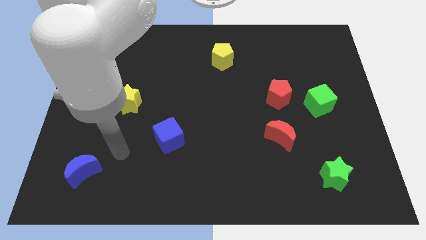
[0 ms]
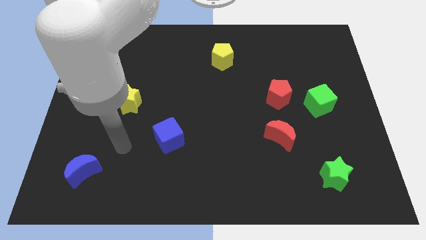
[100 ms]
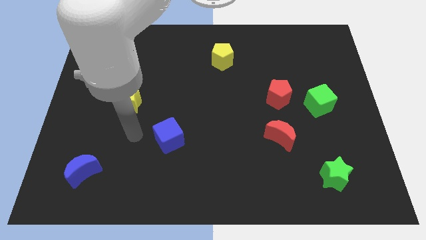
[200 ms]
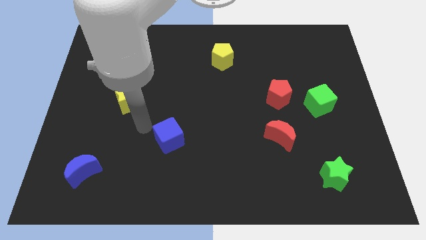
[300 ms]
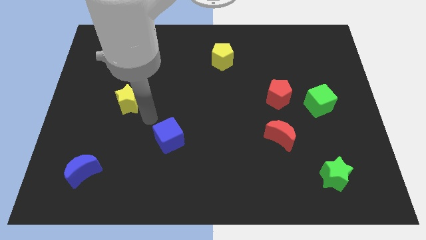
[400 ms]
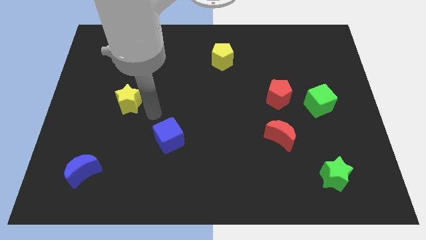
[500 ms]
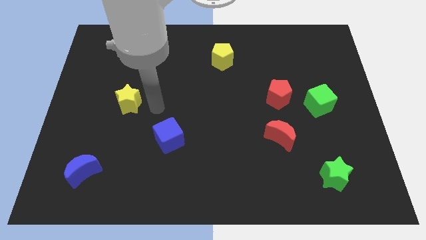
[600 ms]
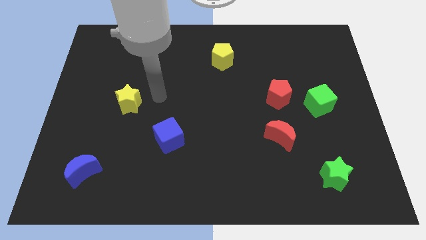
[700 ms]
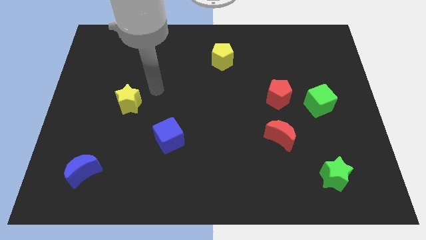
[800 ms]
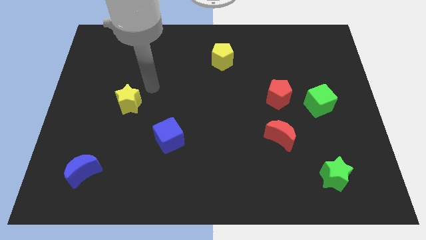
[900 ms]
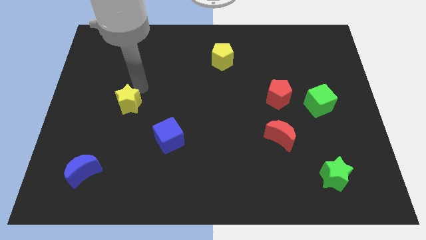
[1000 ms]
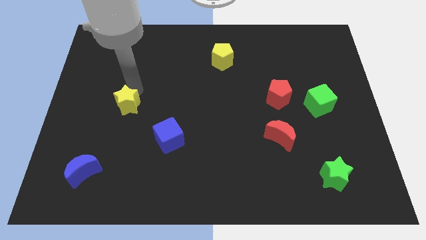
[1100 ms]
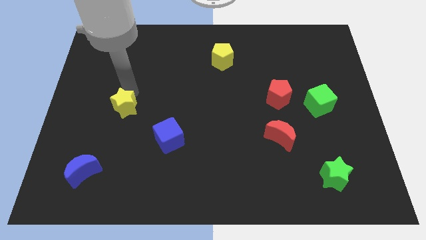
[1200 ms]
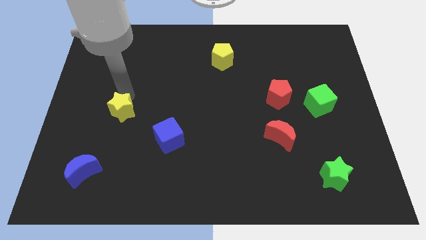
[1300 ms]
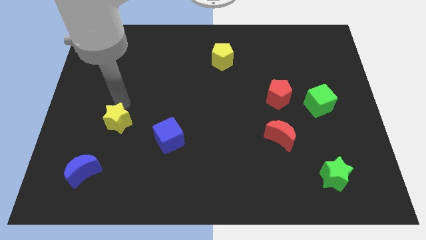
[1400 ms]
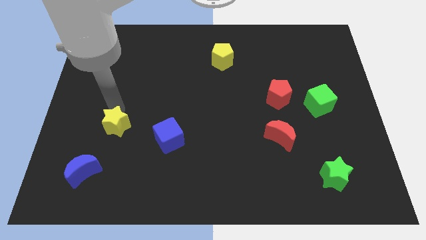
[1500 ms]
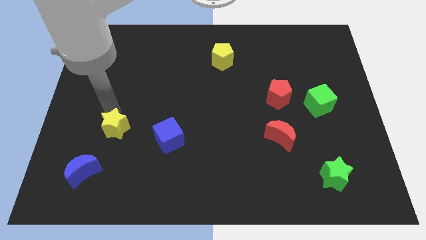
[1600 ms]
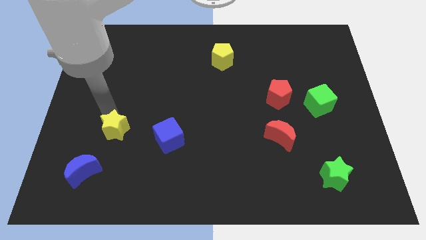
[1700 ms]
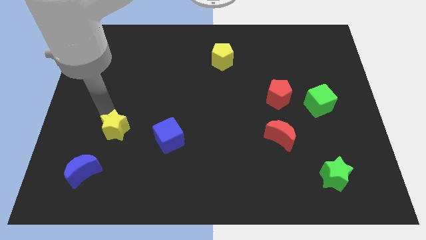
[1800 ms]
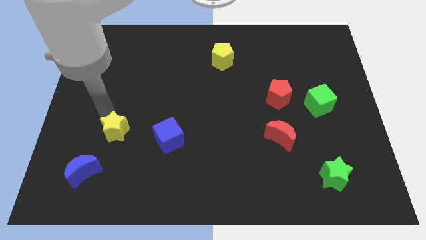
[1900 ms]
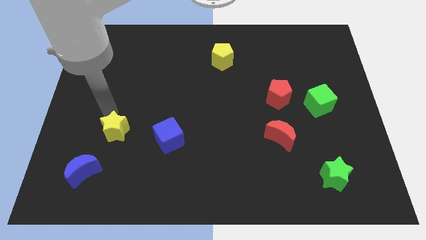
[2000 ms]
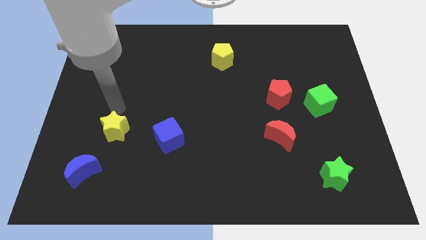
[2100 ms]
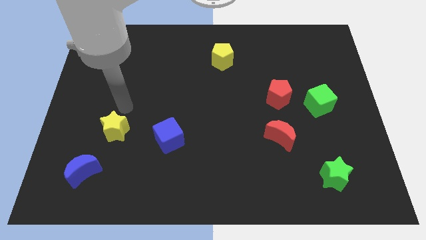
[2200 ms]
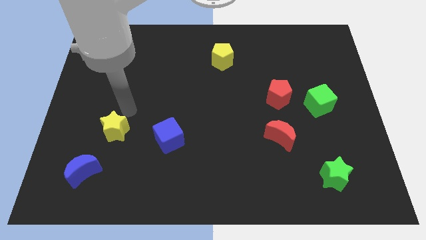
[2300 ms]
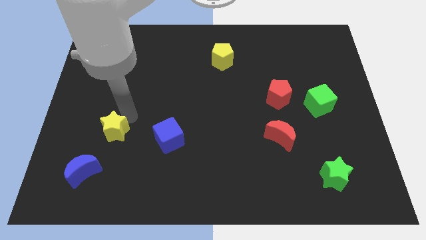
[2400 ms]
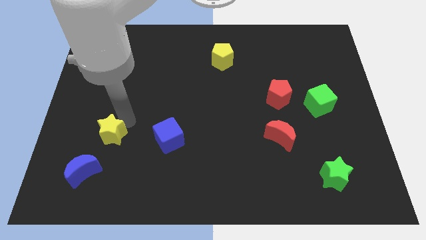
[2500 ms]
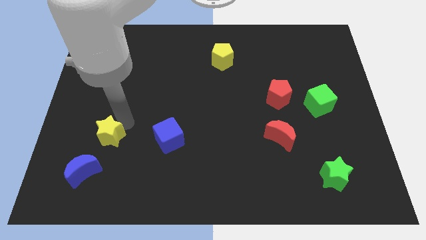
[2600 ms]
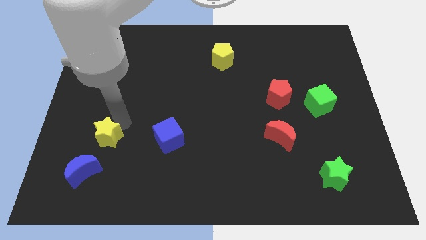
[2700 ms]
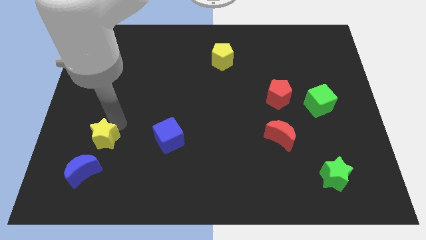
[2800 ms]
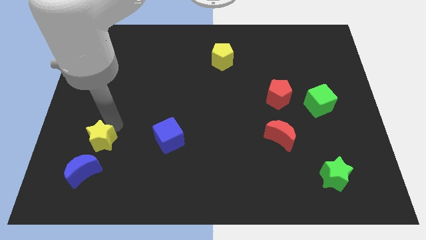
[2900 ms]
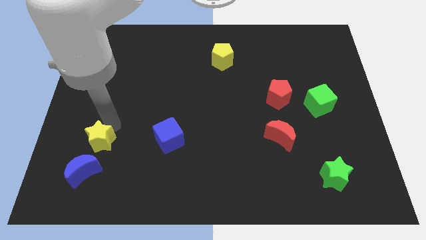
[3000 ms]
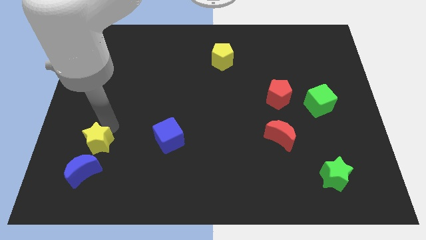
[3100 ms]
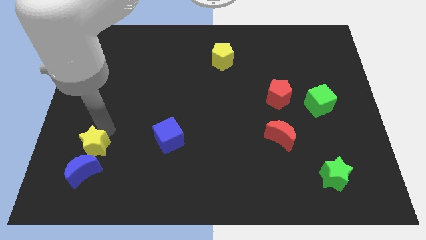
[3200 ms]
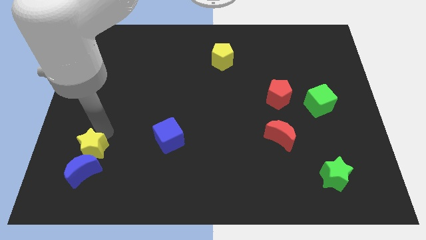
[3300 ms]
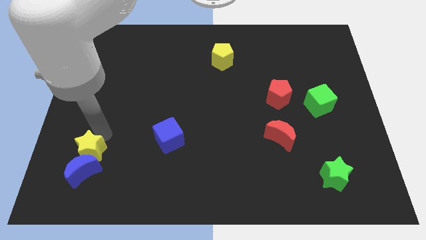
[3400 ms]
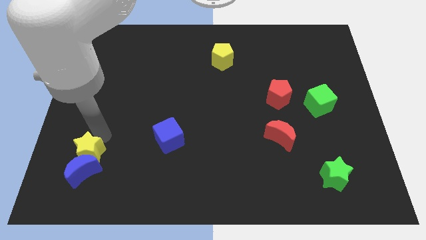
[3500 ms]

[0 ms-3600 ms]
move the yellow star towards the blue moon

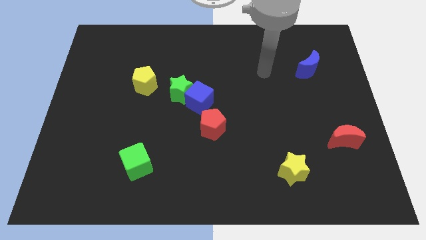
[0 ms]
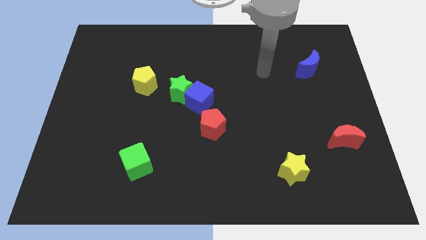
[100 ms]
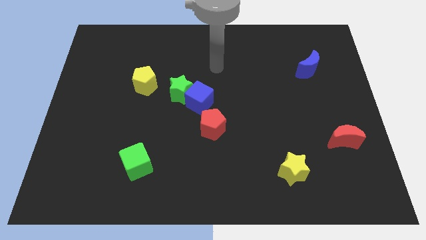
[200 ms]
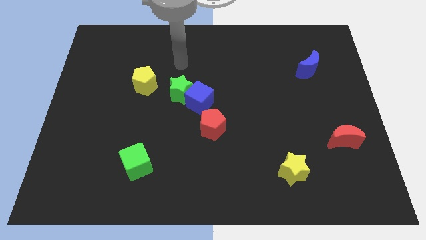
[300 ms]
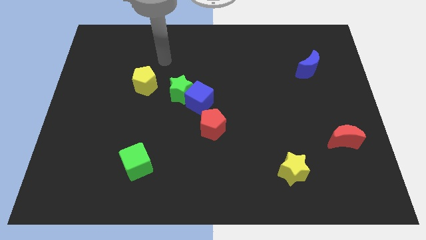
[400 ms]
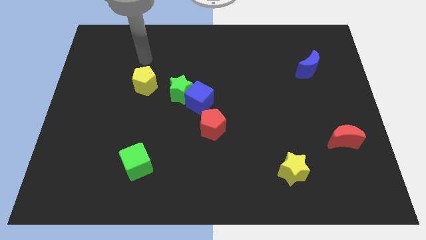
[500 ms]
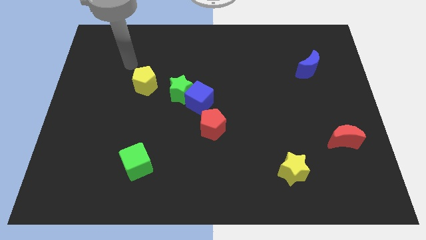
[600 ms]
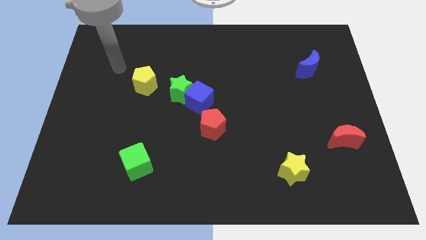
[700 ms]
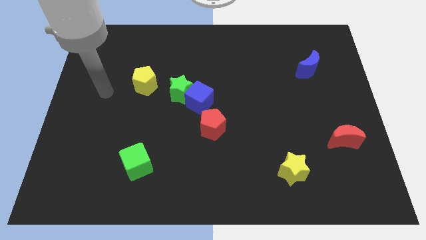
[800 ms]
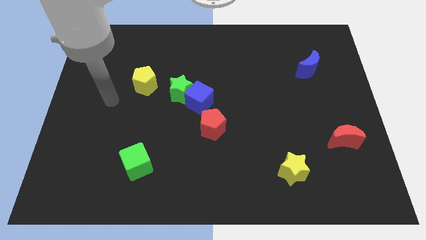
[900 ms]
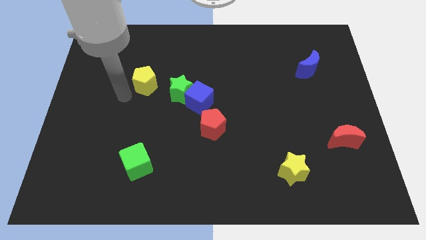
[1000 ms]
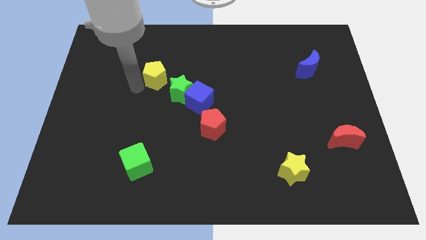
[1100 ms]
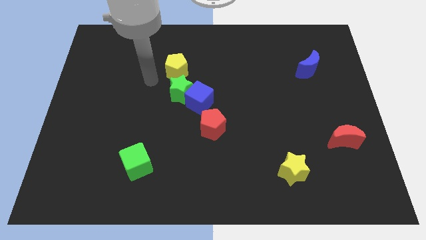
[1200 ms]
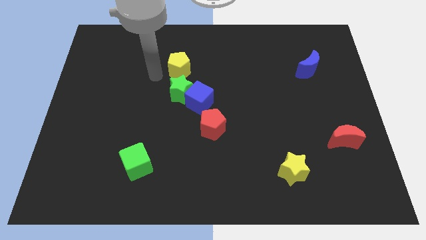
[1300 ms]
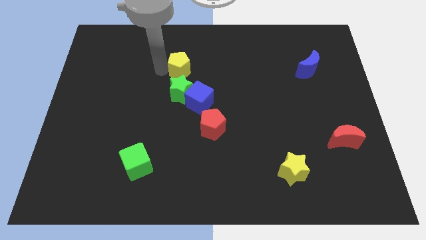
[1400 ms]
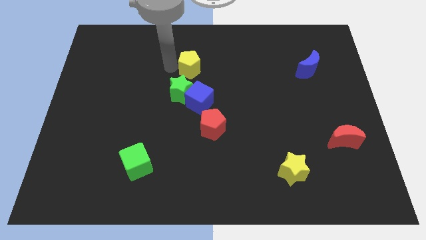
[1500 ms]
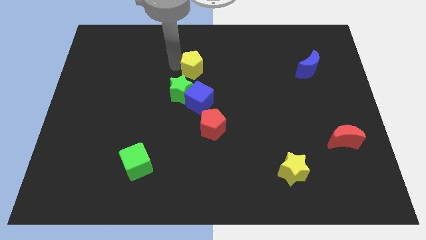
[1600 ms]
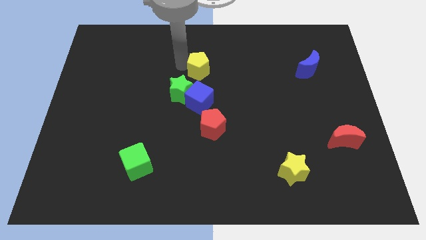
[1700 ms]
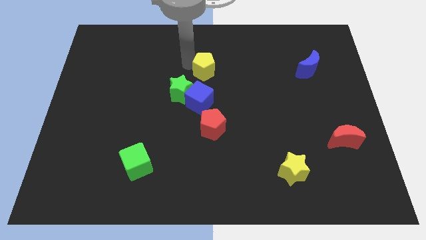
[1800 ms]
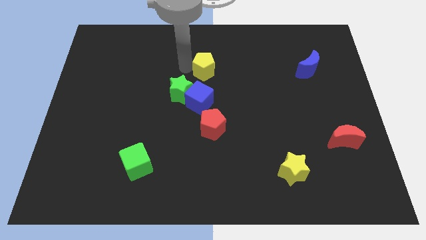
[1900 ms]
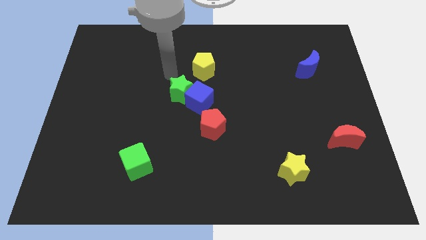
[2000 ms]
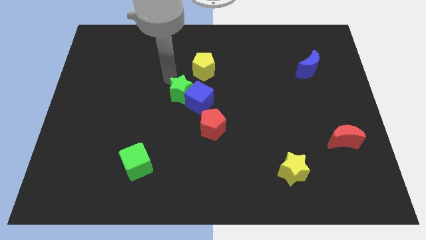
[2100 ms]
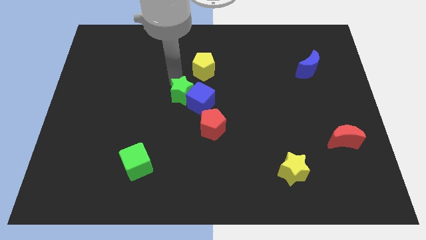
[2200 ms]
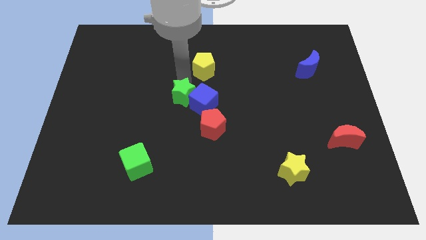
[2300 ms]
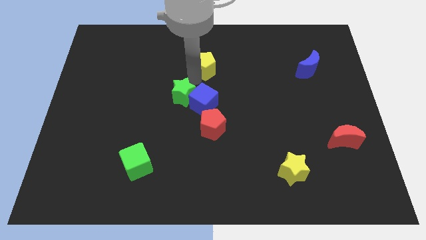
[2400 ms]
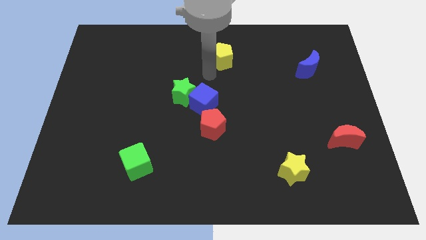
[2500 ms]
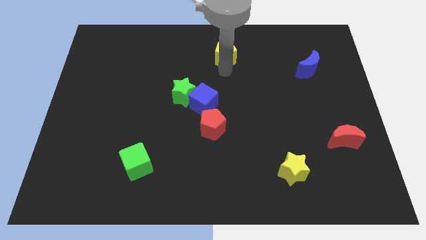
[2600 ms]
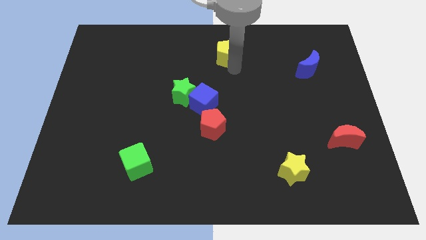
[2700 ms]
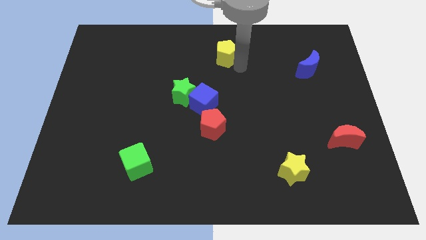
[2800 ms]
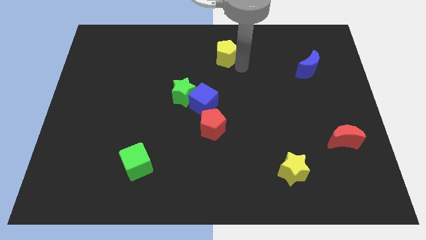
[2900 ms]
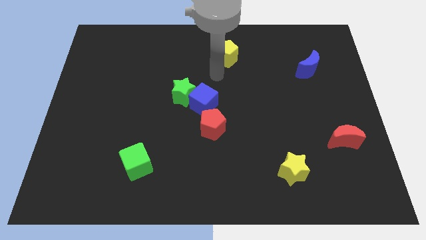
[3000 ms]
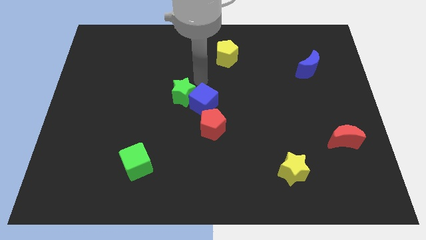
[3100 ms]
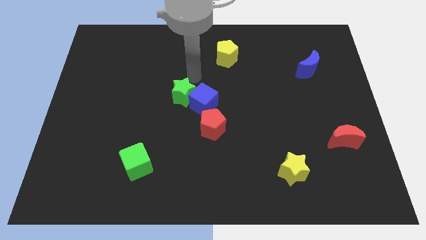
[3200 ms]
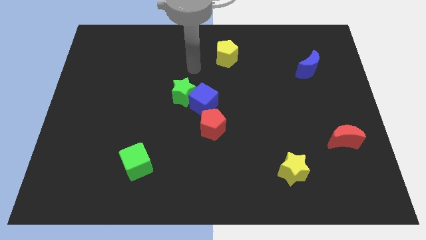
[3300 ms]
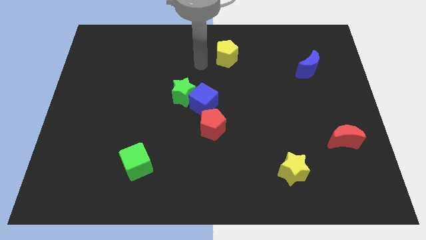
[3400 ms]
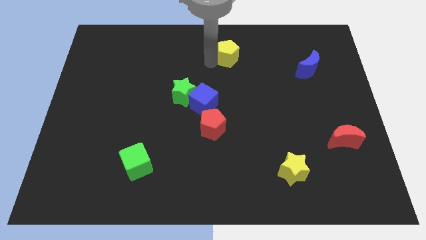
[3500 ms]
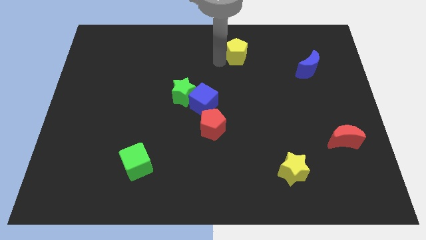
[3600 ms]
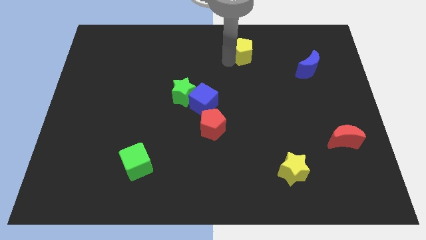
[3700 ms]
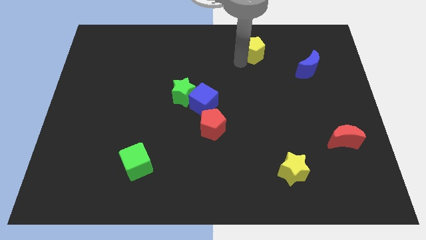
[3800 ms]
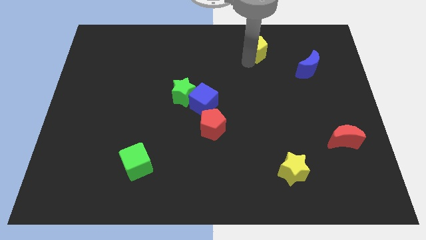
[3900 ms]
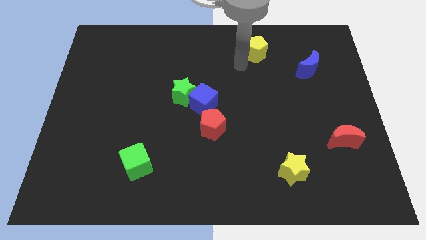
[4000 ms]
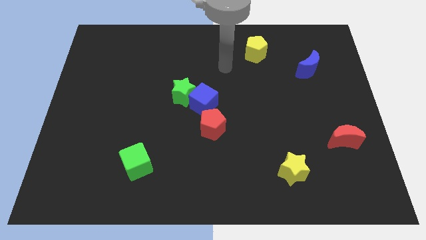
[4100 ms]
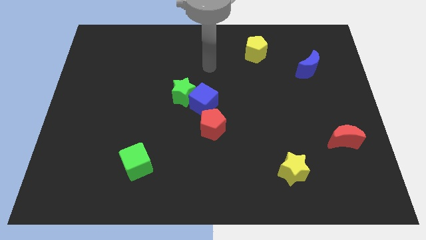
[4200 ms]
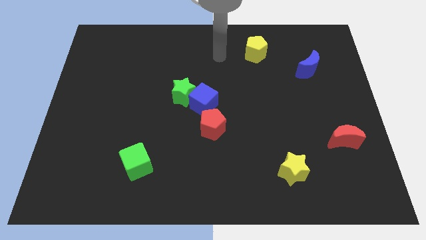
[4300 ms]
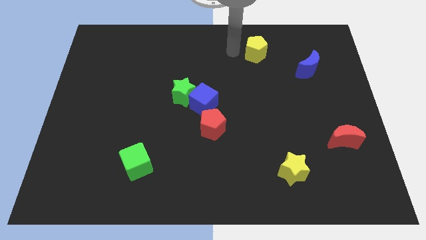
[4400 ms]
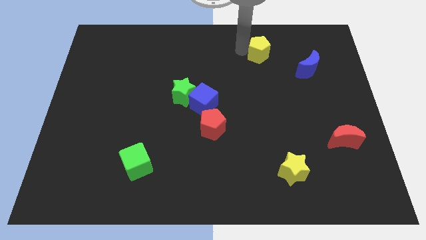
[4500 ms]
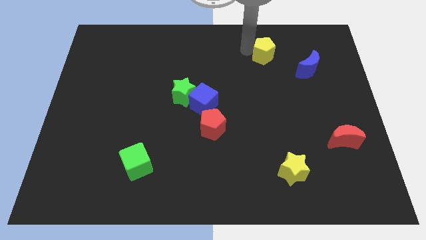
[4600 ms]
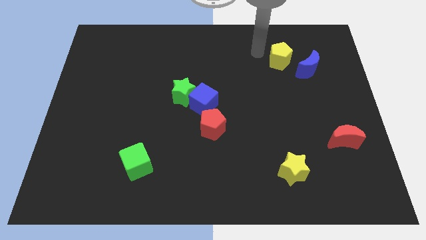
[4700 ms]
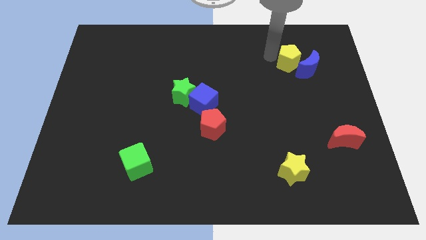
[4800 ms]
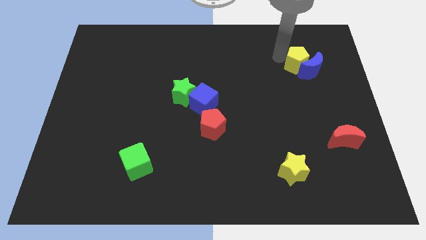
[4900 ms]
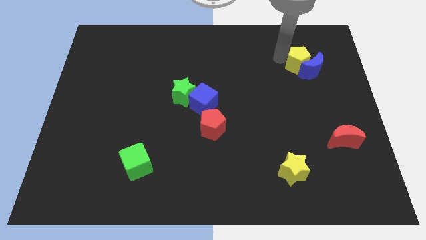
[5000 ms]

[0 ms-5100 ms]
move the yellow pentagon close to the blue moon

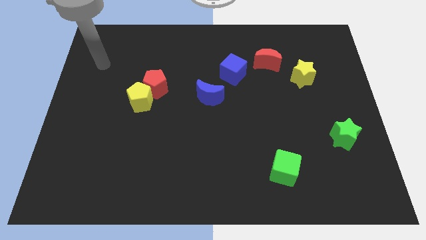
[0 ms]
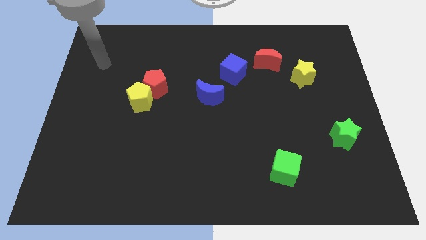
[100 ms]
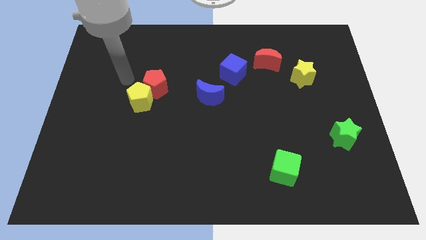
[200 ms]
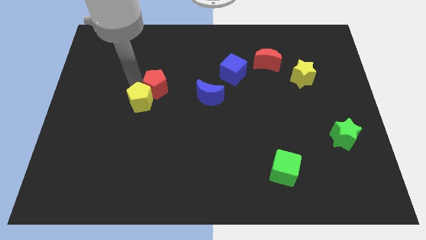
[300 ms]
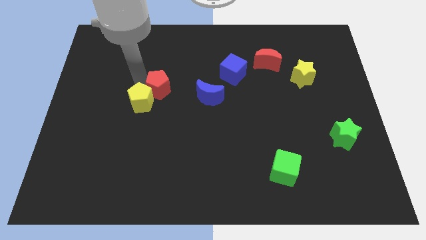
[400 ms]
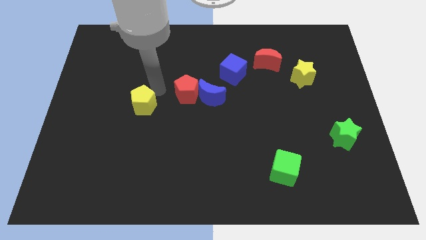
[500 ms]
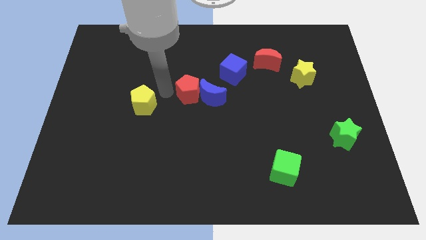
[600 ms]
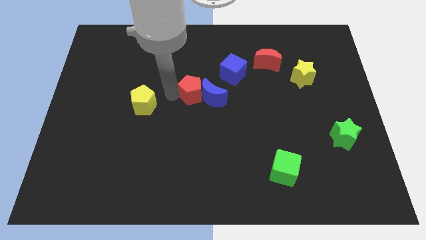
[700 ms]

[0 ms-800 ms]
put the red pentagon towards the blue moon
